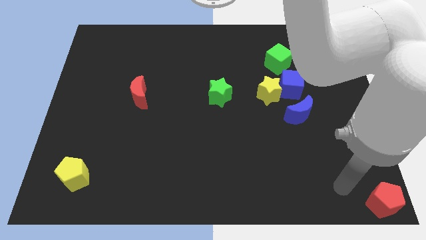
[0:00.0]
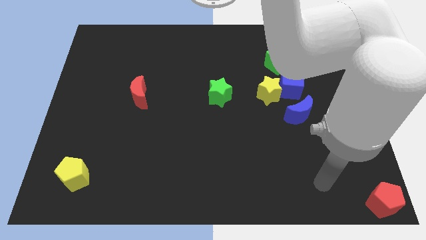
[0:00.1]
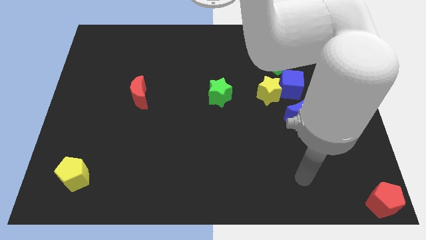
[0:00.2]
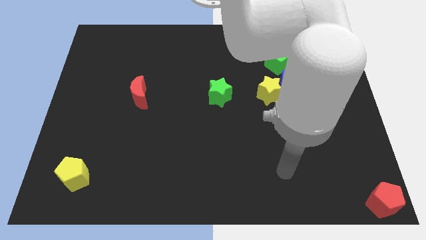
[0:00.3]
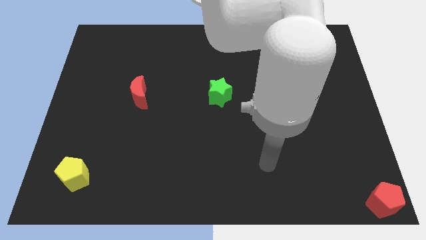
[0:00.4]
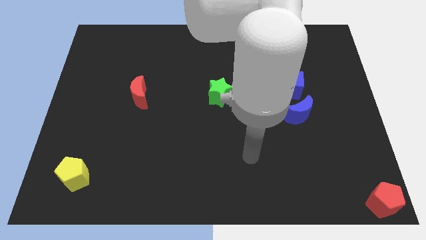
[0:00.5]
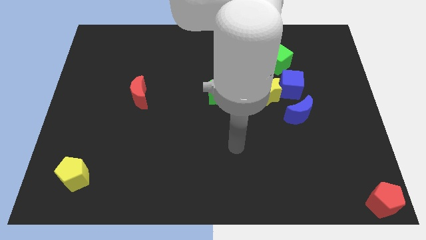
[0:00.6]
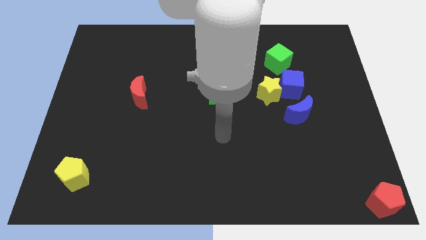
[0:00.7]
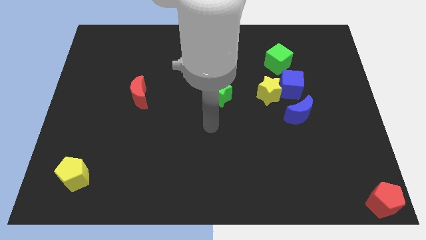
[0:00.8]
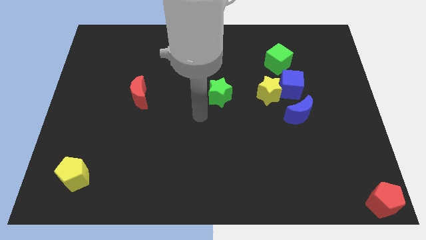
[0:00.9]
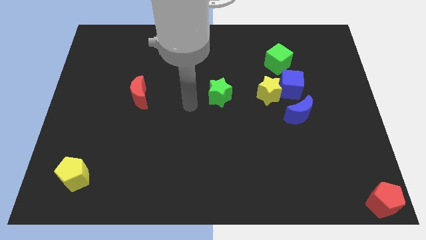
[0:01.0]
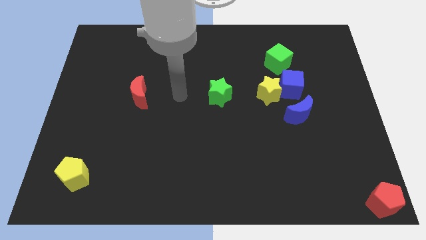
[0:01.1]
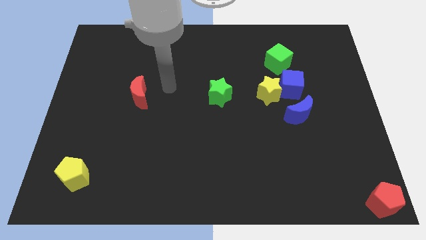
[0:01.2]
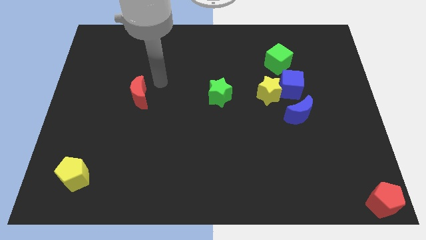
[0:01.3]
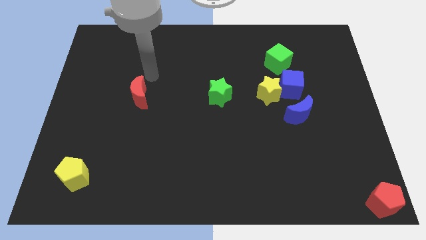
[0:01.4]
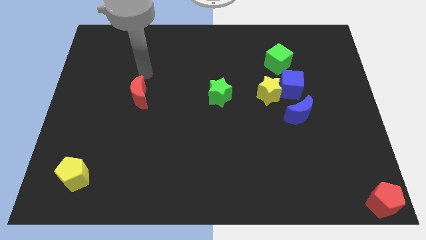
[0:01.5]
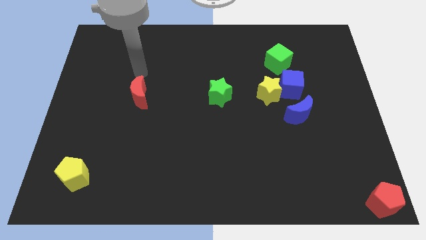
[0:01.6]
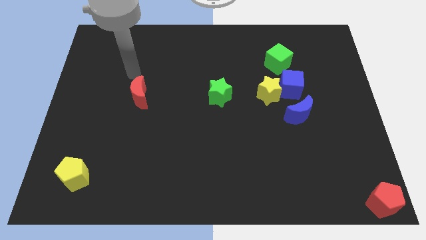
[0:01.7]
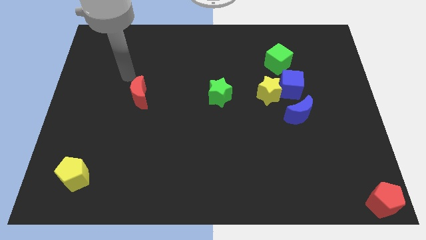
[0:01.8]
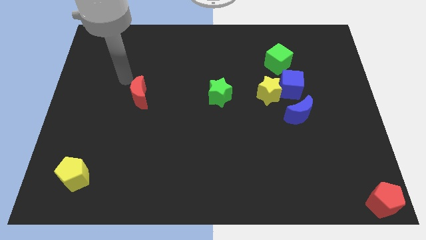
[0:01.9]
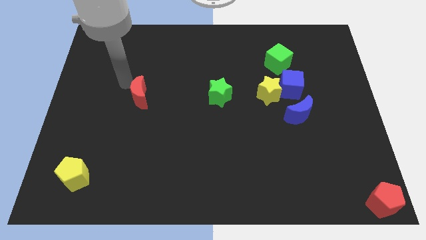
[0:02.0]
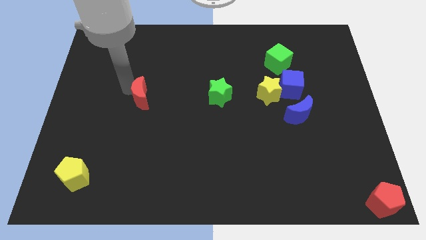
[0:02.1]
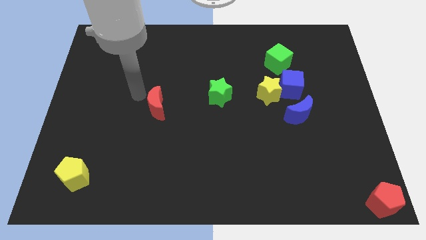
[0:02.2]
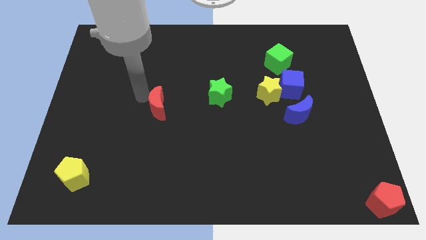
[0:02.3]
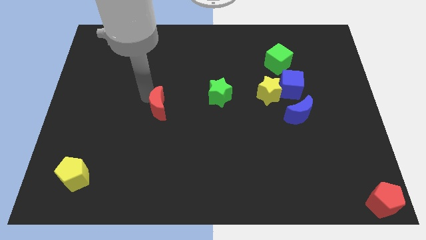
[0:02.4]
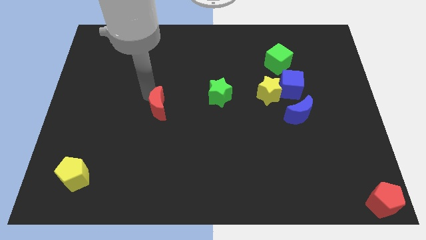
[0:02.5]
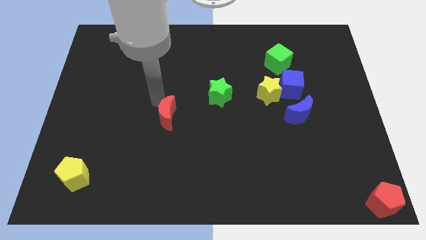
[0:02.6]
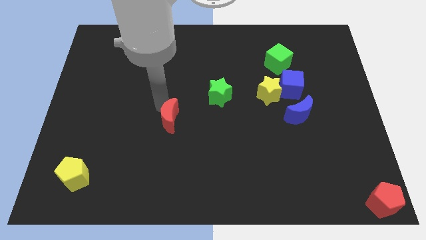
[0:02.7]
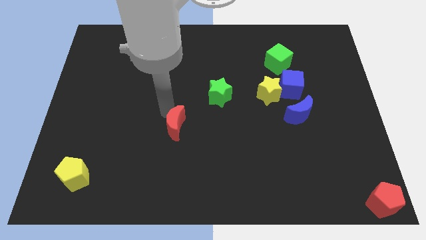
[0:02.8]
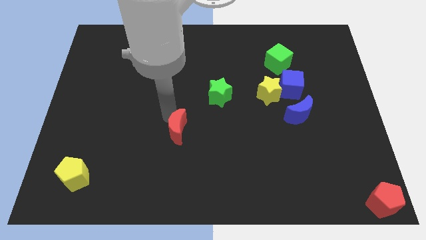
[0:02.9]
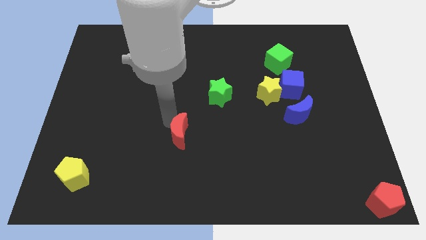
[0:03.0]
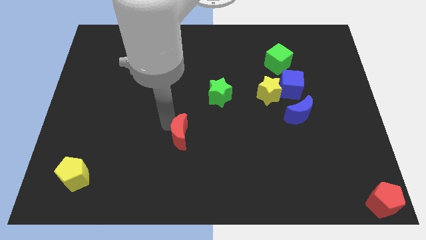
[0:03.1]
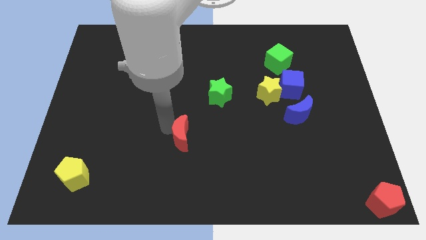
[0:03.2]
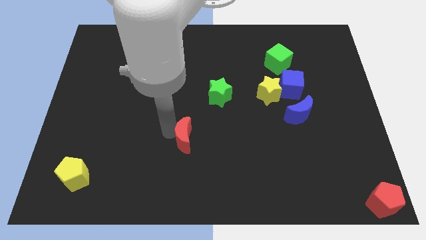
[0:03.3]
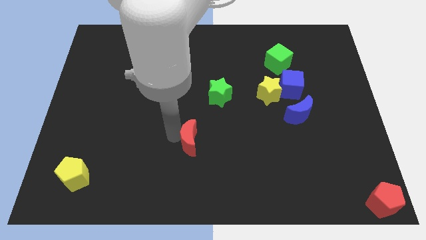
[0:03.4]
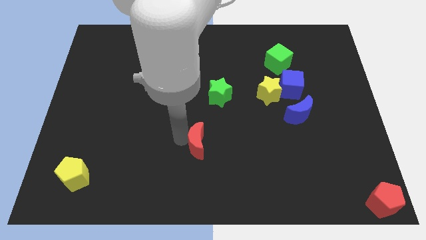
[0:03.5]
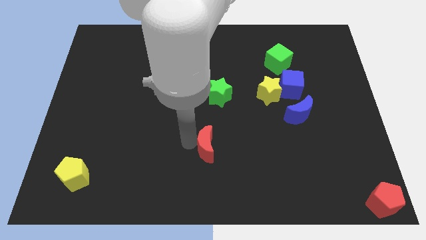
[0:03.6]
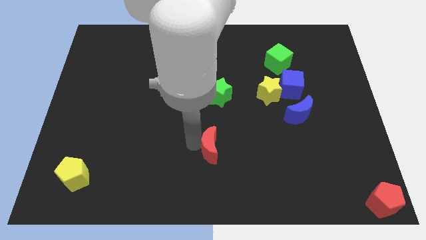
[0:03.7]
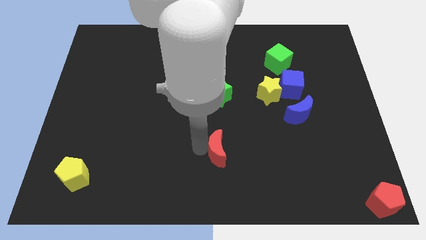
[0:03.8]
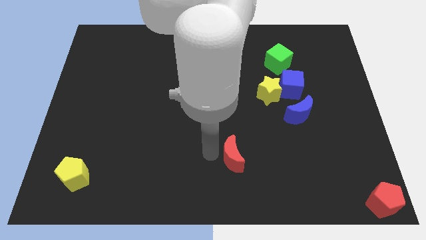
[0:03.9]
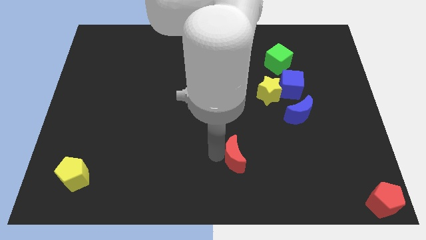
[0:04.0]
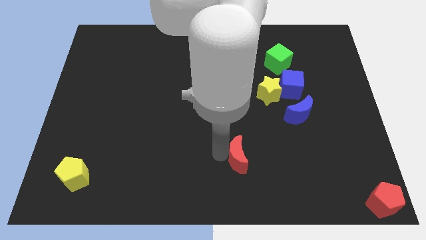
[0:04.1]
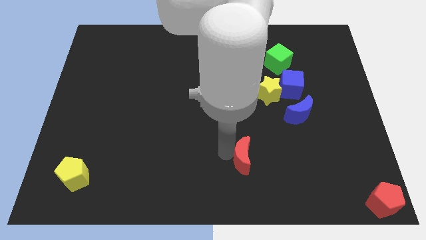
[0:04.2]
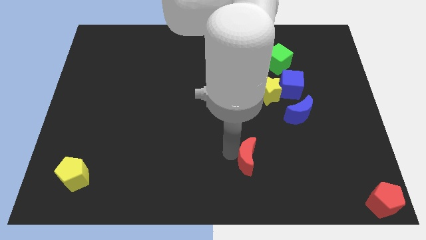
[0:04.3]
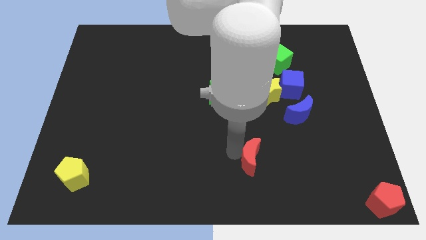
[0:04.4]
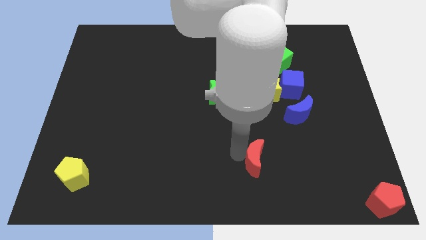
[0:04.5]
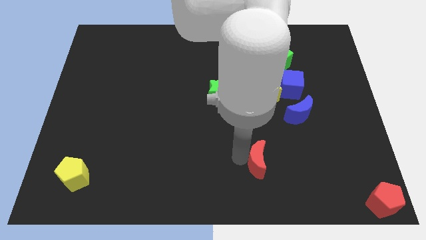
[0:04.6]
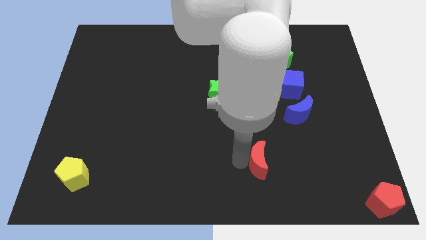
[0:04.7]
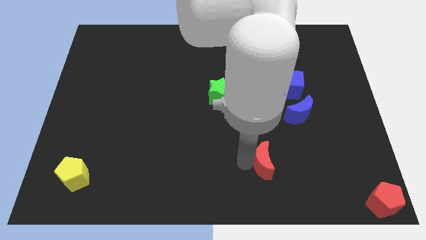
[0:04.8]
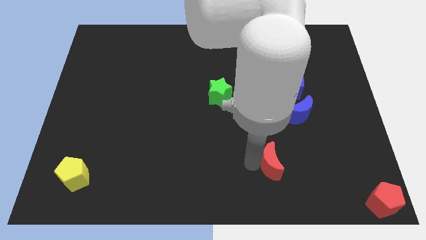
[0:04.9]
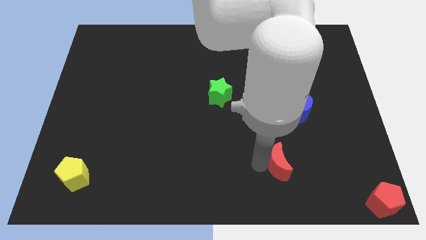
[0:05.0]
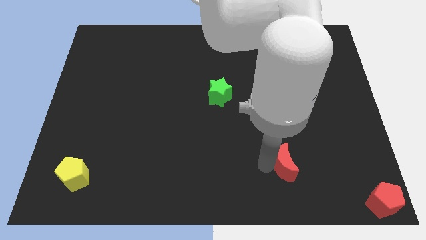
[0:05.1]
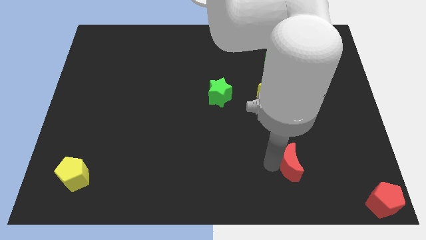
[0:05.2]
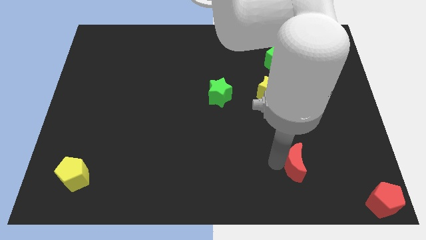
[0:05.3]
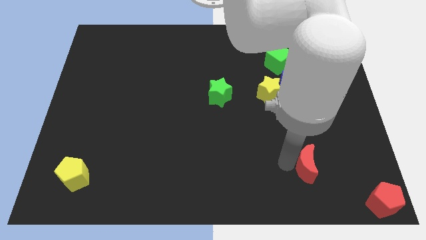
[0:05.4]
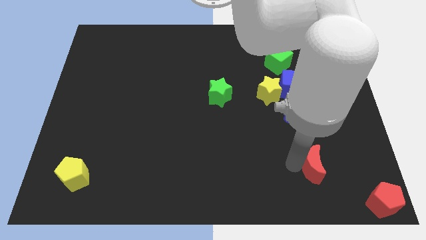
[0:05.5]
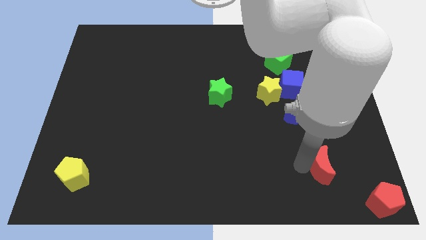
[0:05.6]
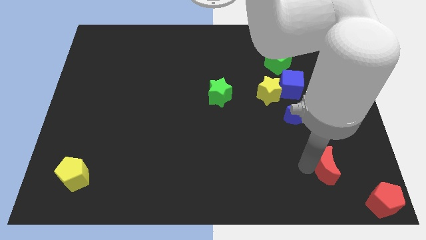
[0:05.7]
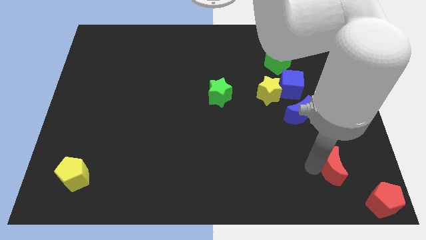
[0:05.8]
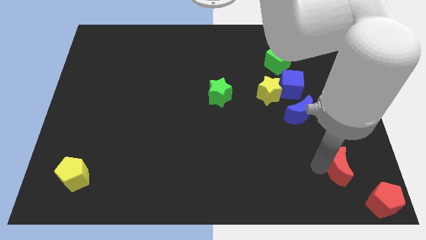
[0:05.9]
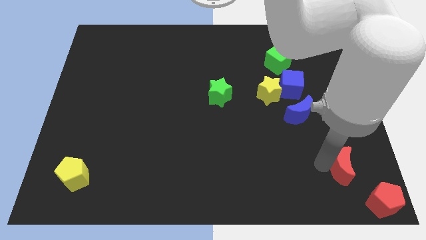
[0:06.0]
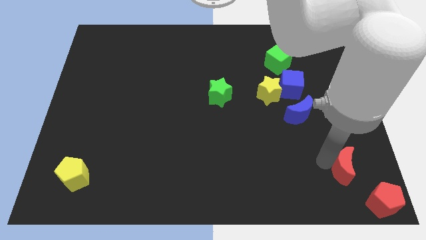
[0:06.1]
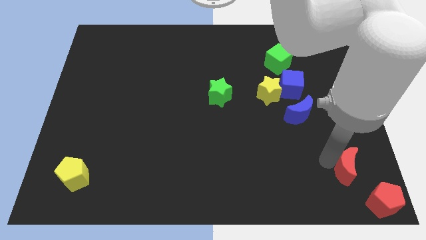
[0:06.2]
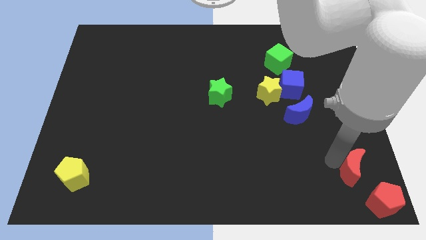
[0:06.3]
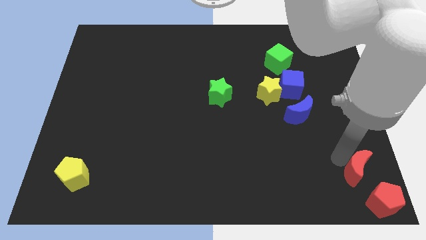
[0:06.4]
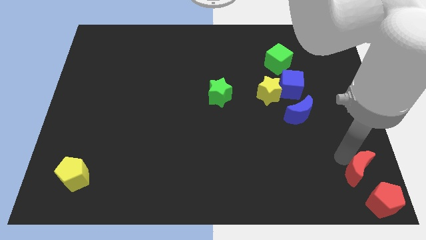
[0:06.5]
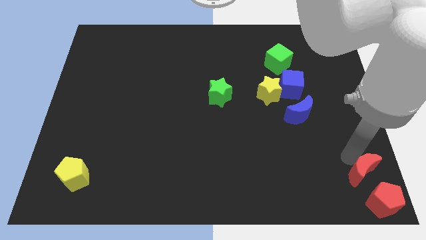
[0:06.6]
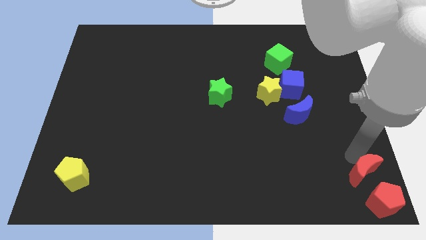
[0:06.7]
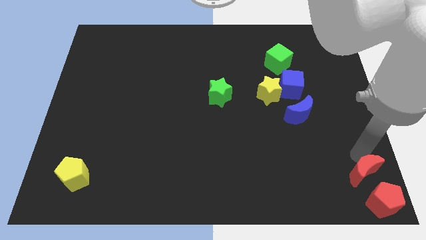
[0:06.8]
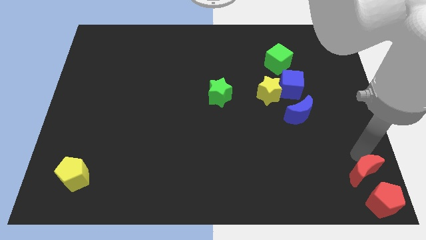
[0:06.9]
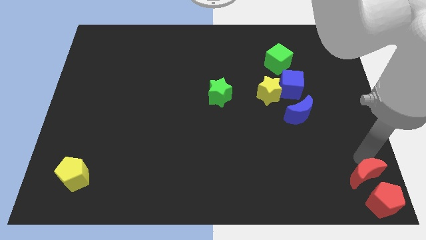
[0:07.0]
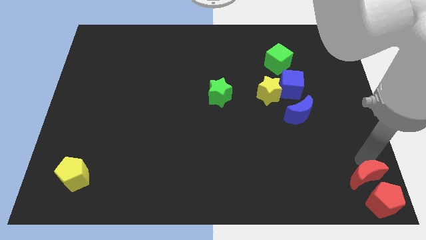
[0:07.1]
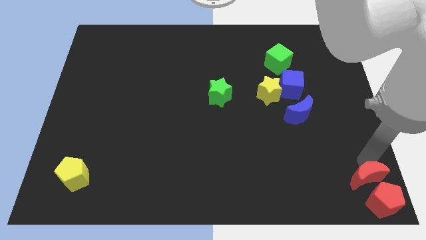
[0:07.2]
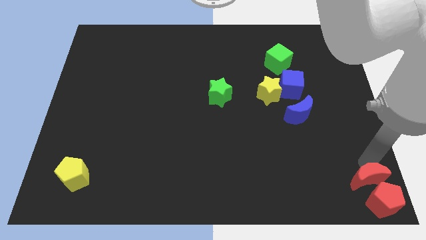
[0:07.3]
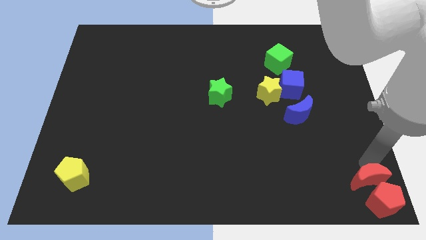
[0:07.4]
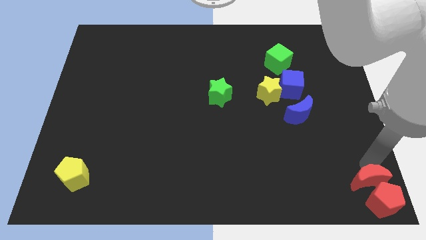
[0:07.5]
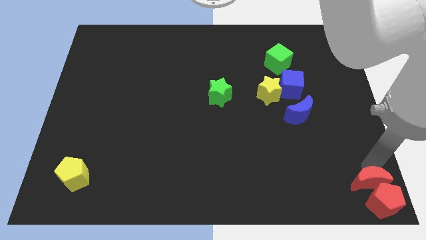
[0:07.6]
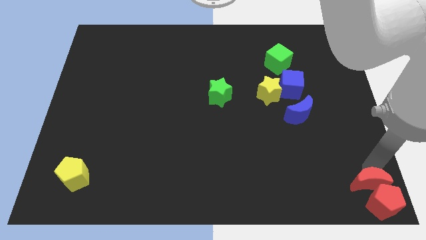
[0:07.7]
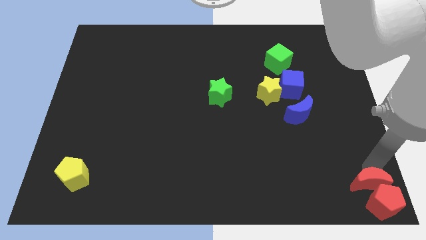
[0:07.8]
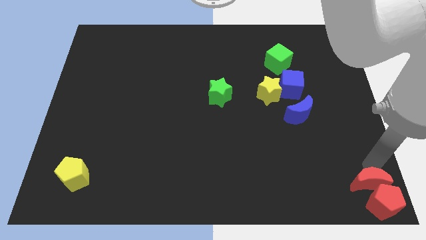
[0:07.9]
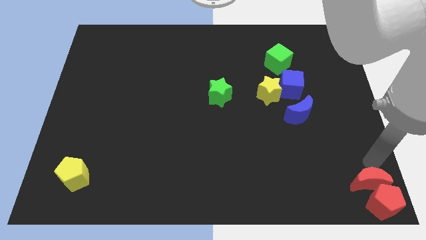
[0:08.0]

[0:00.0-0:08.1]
move the red crescent towards the top of the red pentagon

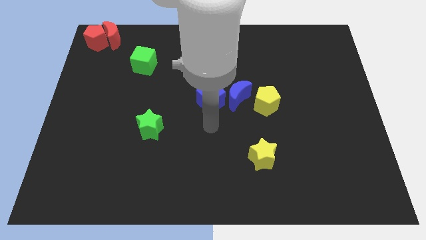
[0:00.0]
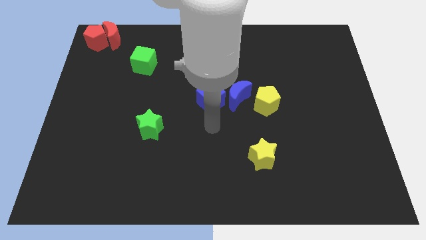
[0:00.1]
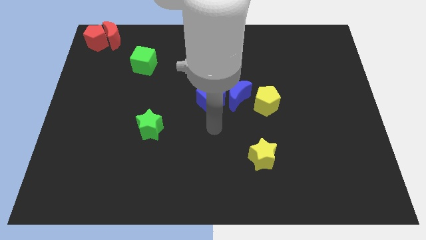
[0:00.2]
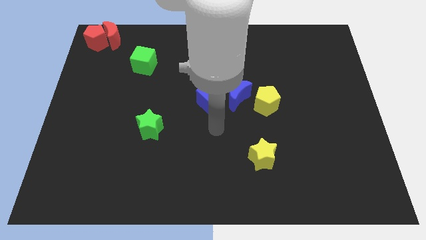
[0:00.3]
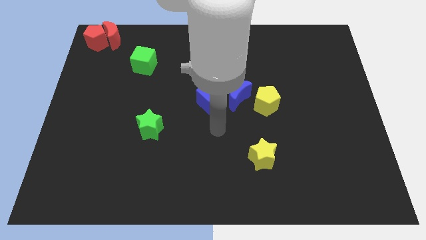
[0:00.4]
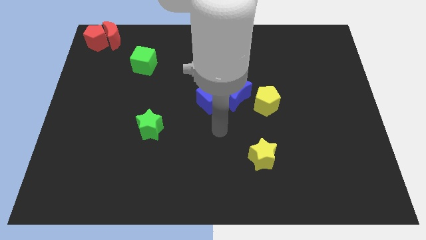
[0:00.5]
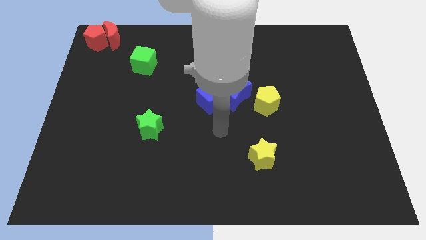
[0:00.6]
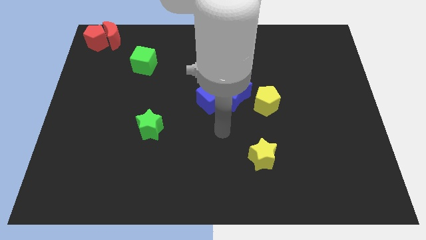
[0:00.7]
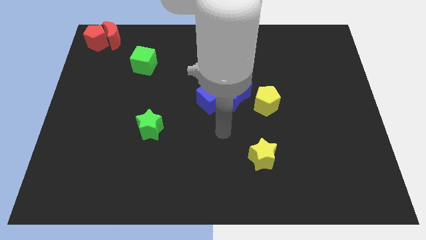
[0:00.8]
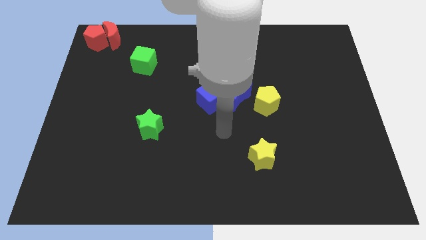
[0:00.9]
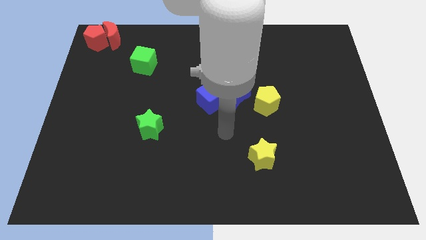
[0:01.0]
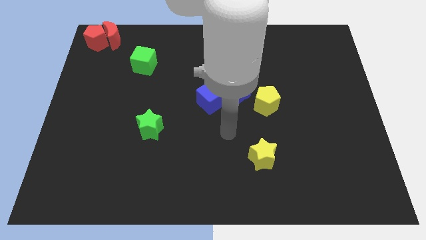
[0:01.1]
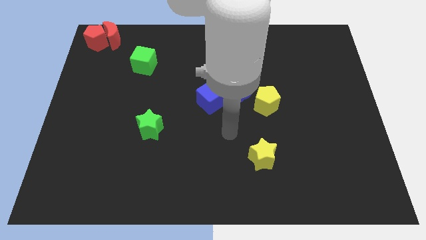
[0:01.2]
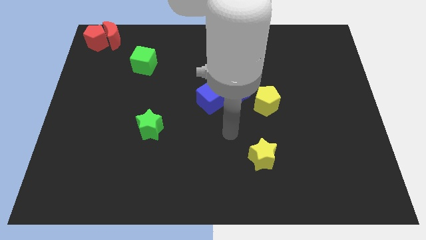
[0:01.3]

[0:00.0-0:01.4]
move the arm towards the yellow star
